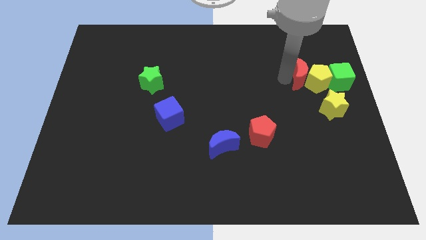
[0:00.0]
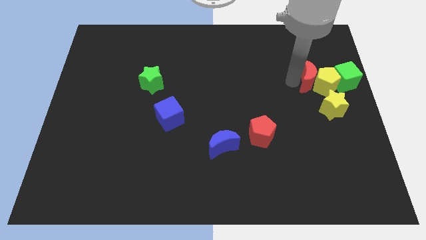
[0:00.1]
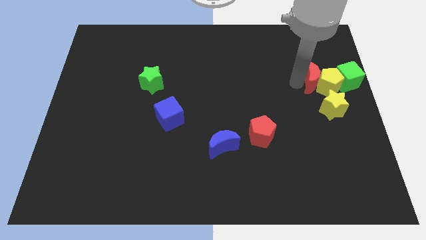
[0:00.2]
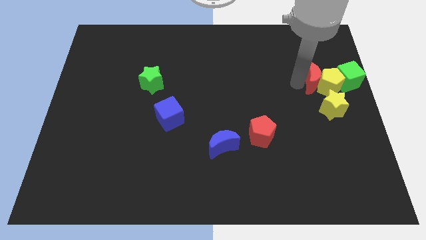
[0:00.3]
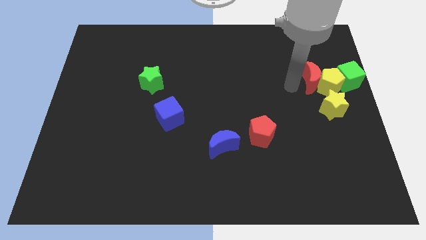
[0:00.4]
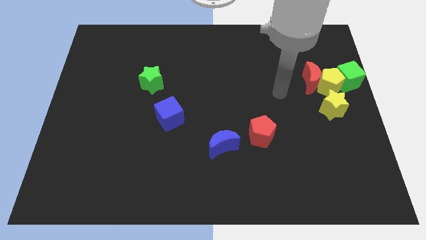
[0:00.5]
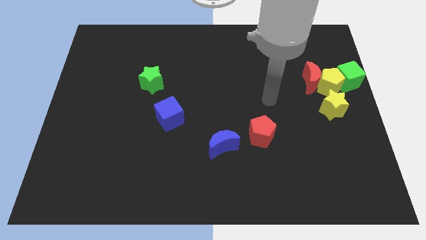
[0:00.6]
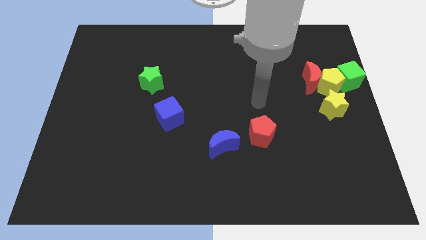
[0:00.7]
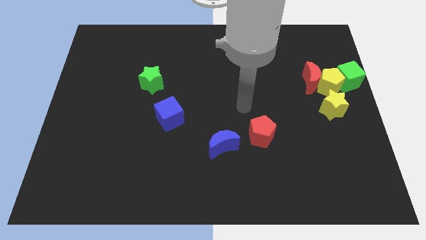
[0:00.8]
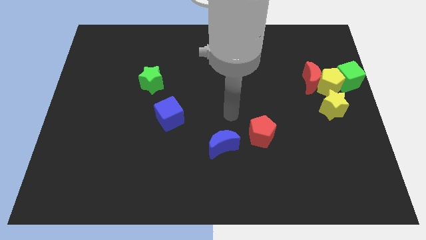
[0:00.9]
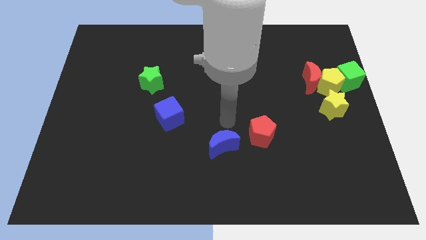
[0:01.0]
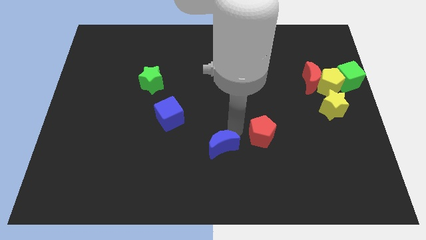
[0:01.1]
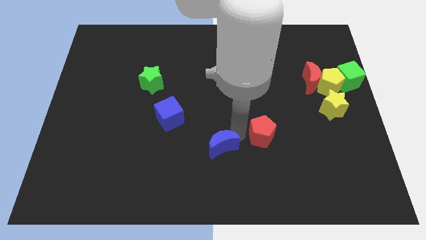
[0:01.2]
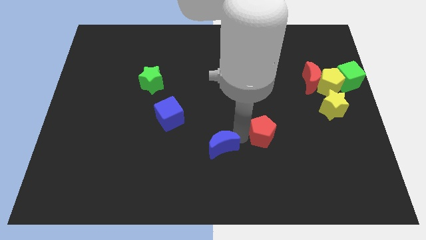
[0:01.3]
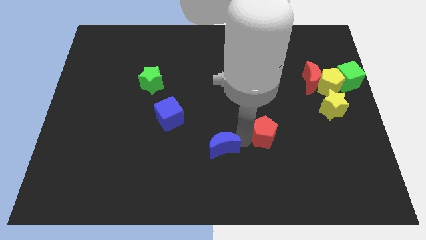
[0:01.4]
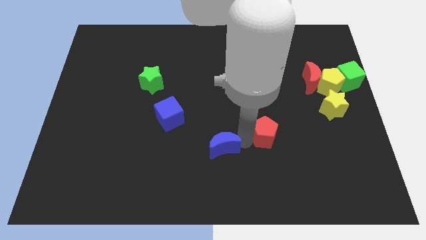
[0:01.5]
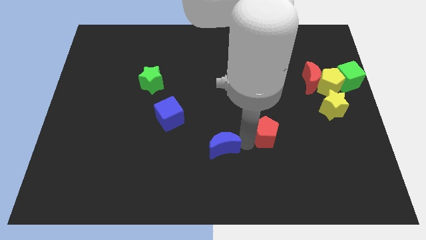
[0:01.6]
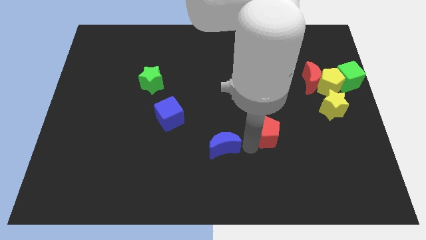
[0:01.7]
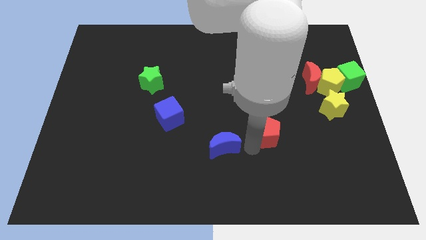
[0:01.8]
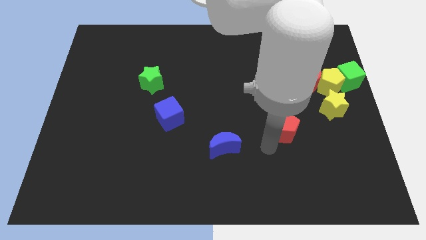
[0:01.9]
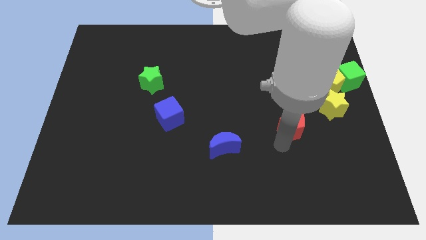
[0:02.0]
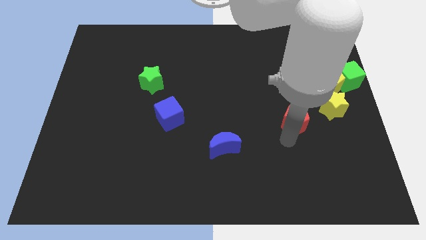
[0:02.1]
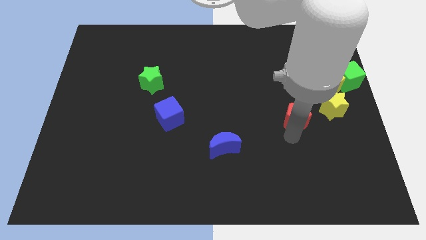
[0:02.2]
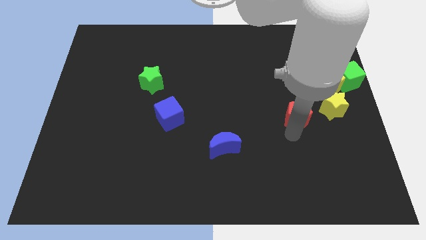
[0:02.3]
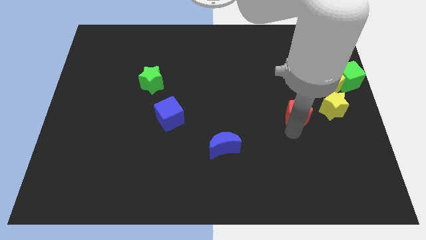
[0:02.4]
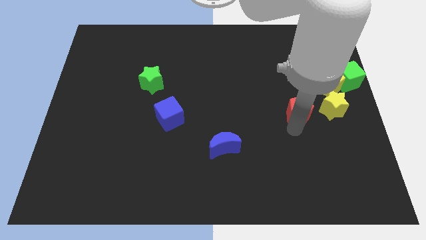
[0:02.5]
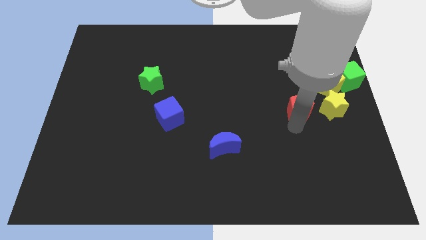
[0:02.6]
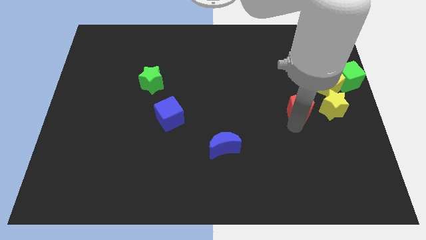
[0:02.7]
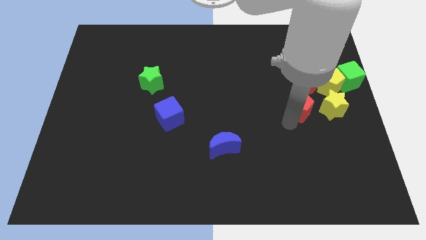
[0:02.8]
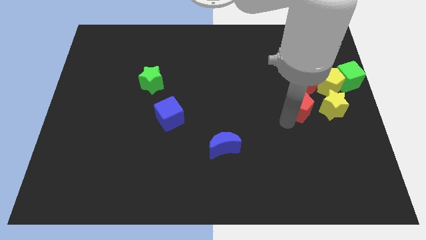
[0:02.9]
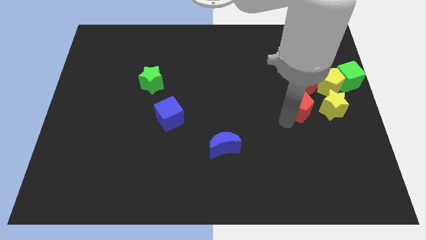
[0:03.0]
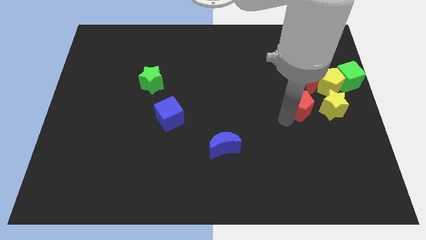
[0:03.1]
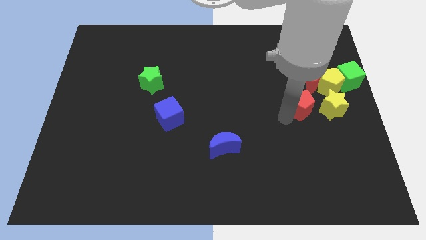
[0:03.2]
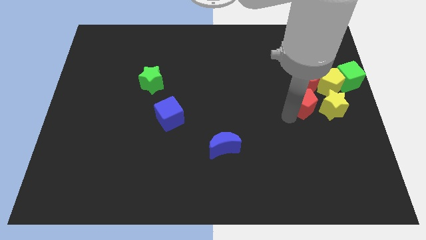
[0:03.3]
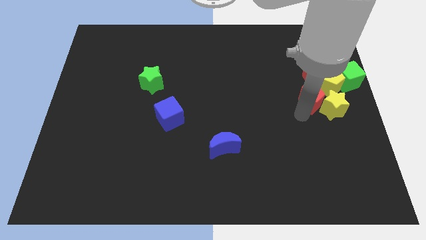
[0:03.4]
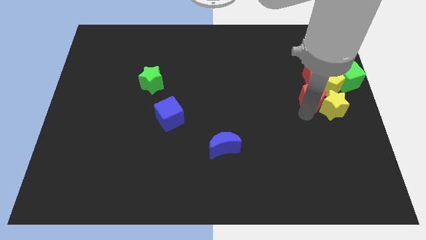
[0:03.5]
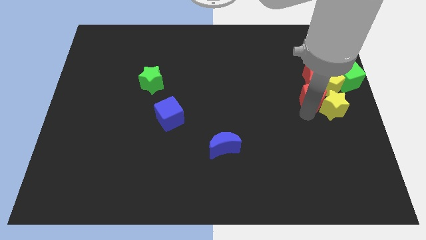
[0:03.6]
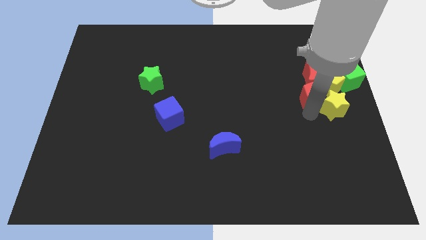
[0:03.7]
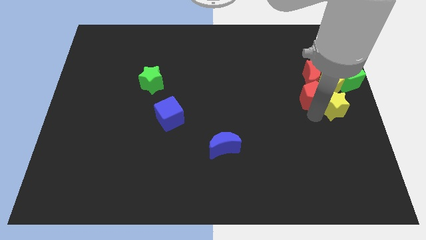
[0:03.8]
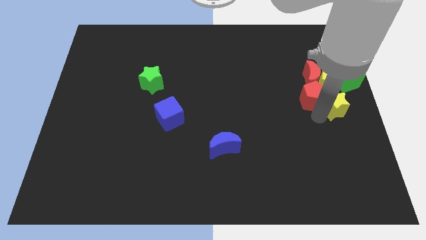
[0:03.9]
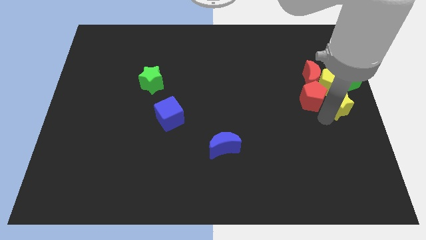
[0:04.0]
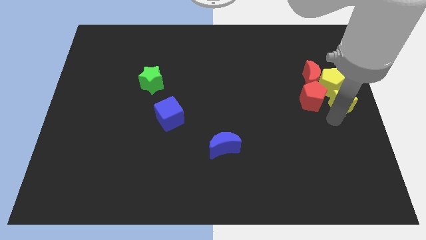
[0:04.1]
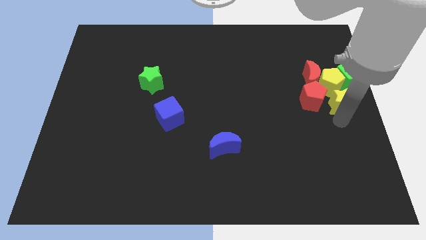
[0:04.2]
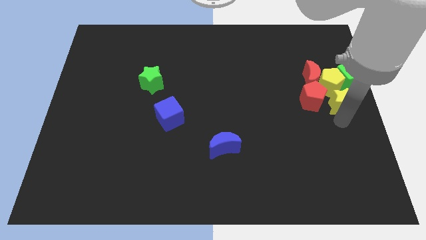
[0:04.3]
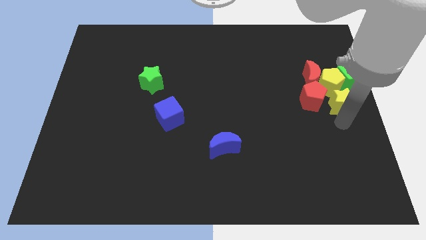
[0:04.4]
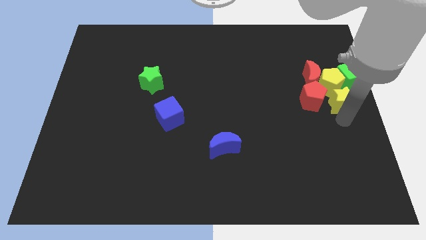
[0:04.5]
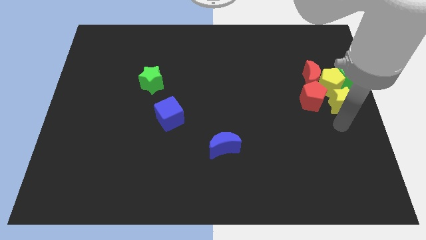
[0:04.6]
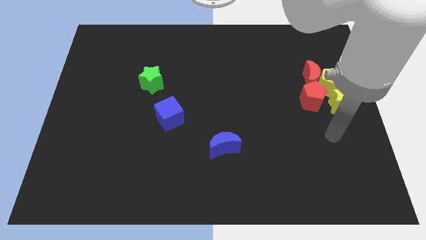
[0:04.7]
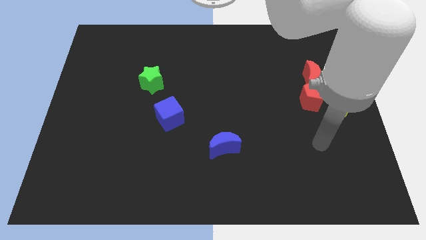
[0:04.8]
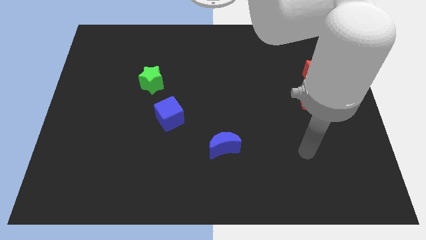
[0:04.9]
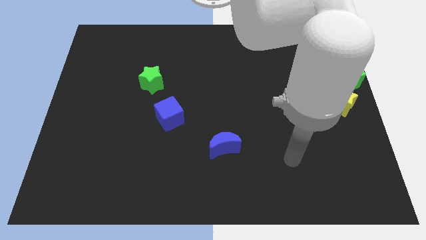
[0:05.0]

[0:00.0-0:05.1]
push the red pentagon into yellow pentagon

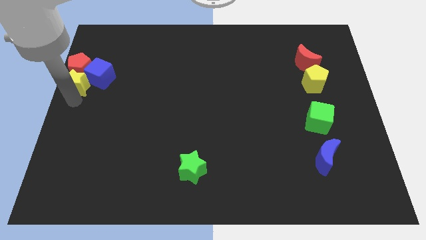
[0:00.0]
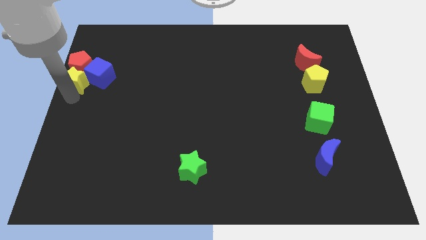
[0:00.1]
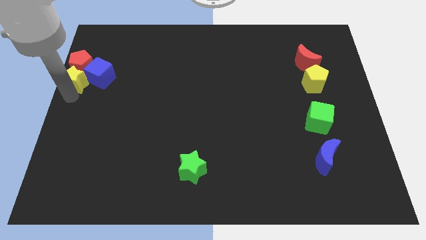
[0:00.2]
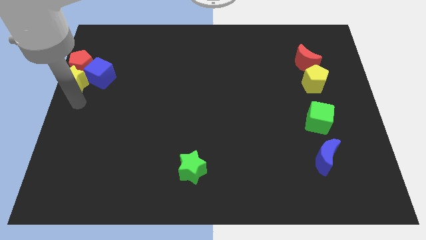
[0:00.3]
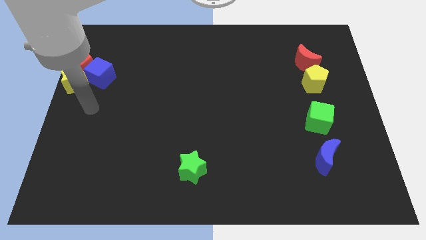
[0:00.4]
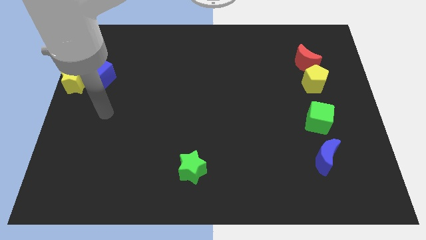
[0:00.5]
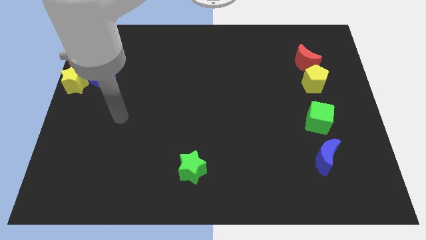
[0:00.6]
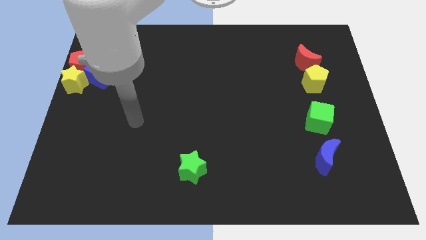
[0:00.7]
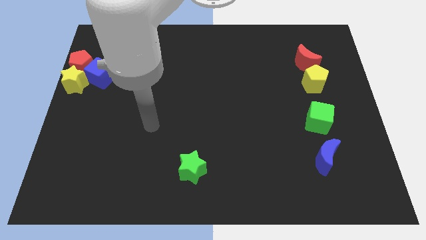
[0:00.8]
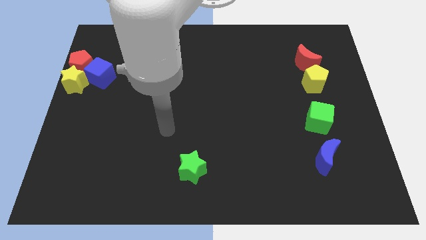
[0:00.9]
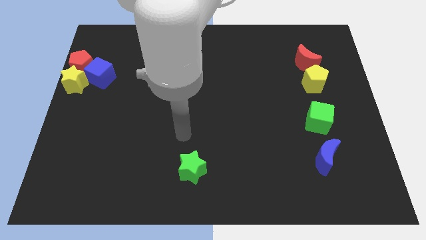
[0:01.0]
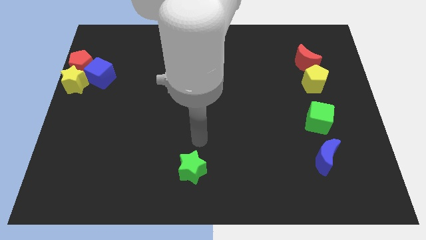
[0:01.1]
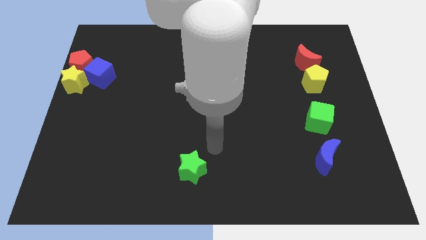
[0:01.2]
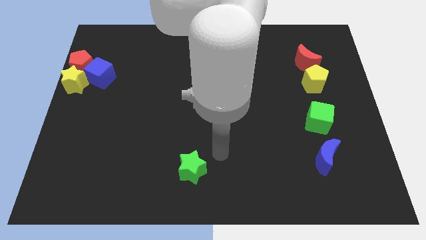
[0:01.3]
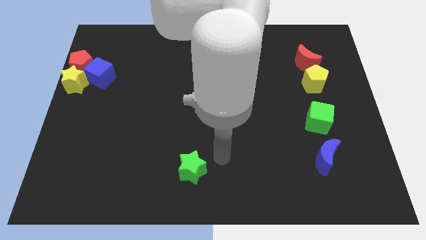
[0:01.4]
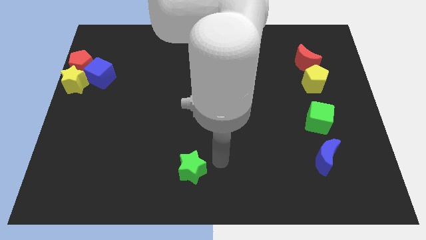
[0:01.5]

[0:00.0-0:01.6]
move the arm to the right of the green star

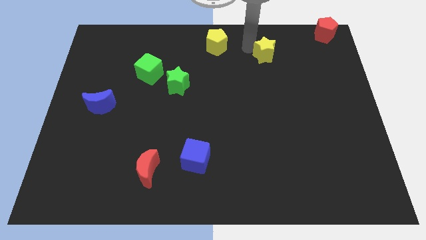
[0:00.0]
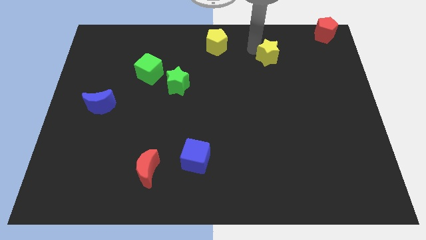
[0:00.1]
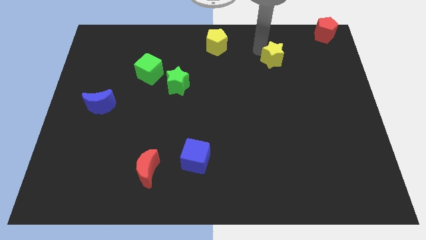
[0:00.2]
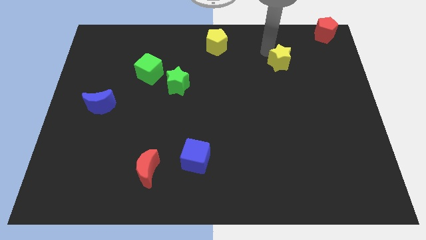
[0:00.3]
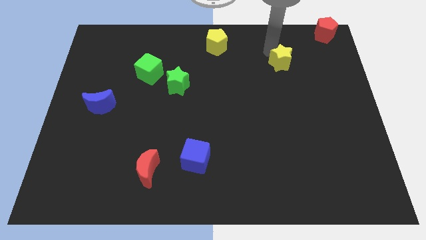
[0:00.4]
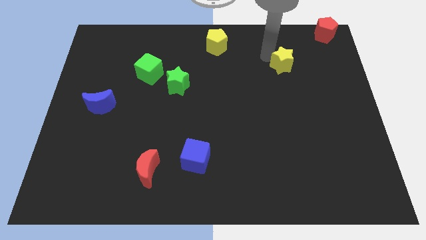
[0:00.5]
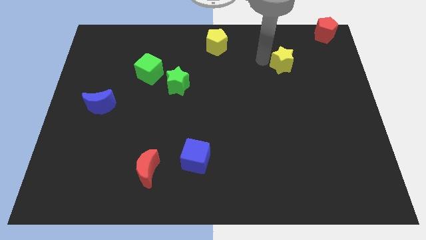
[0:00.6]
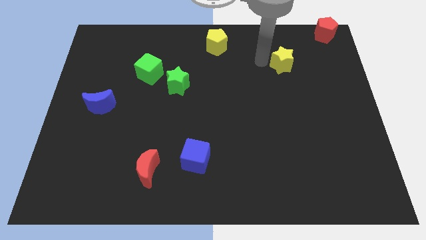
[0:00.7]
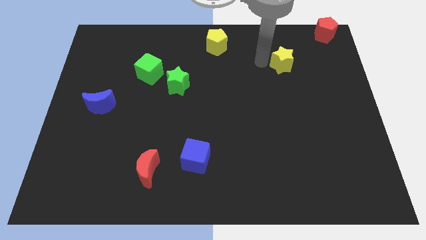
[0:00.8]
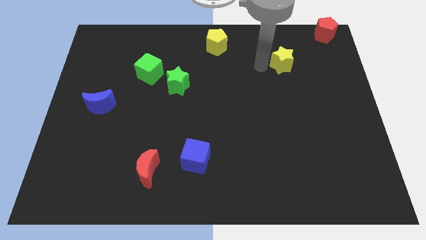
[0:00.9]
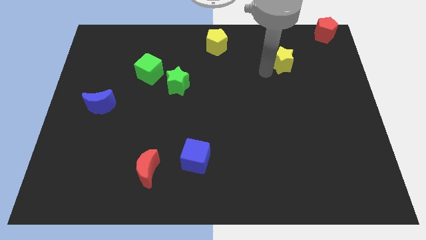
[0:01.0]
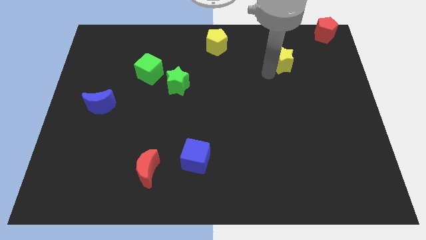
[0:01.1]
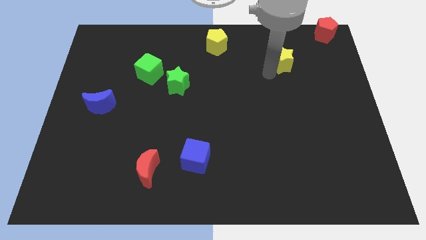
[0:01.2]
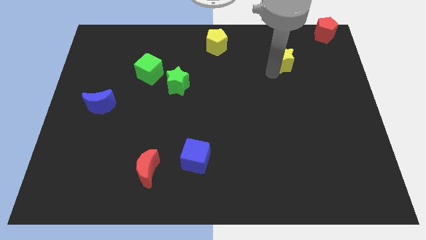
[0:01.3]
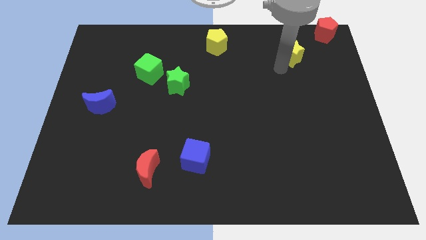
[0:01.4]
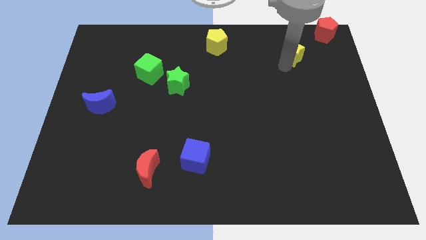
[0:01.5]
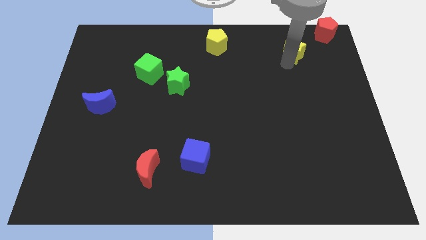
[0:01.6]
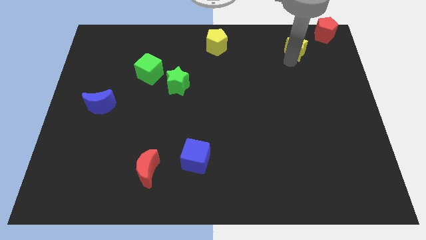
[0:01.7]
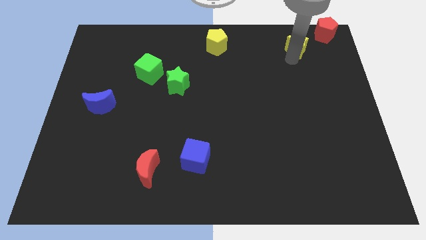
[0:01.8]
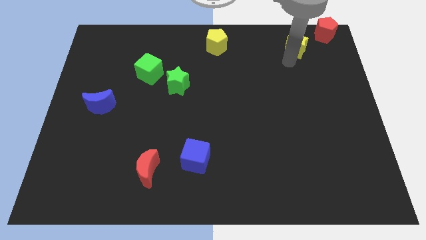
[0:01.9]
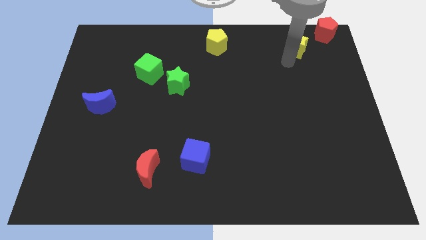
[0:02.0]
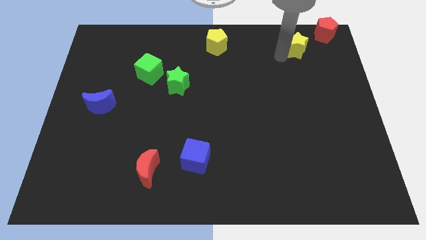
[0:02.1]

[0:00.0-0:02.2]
push the yellow star towards red pentagon
